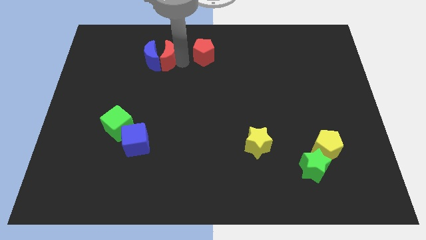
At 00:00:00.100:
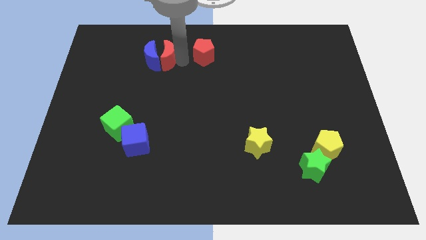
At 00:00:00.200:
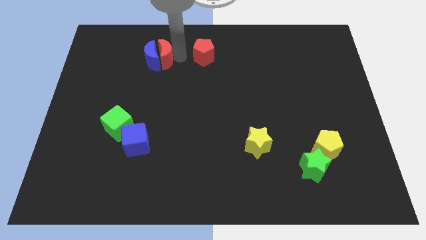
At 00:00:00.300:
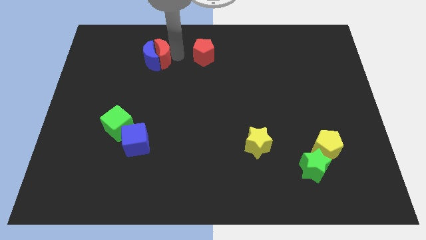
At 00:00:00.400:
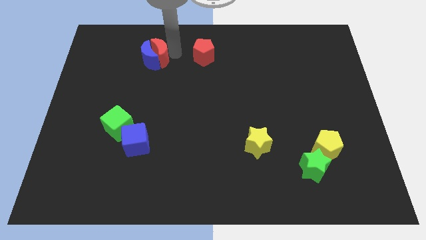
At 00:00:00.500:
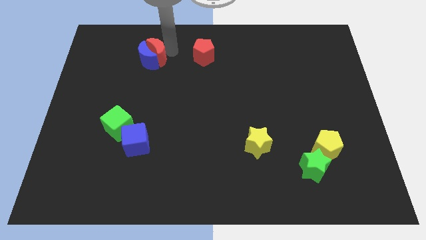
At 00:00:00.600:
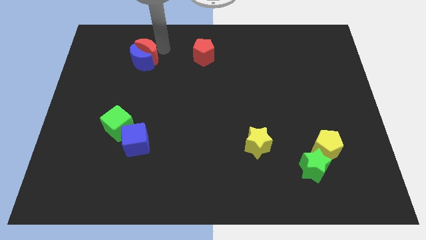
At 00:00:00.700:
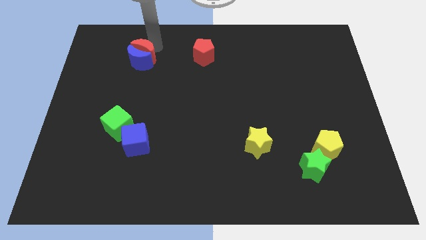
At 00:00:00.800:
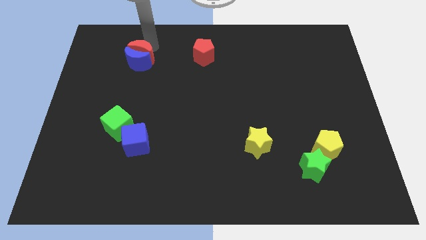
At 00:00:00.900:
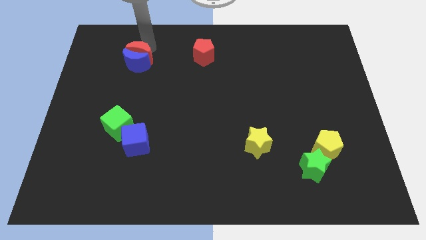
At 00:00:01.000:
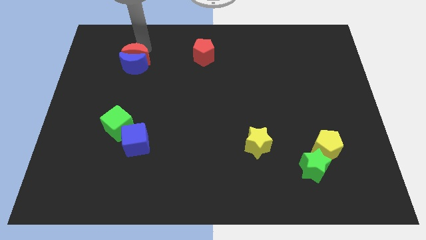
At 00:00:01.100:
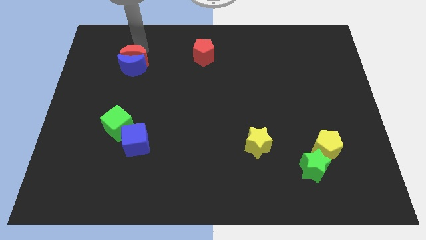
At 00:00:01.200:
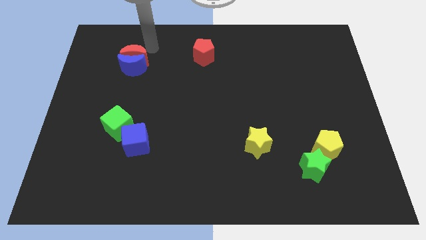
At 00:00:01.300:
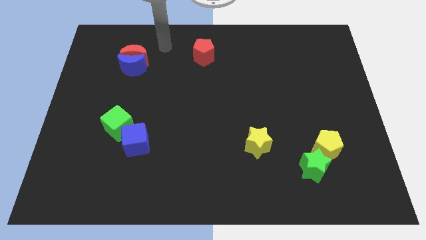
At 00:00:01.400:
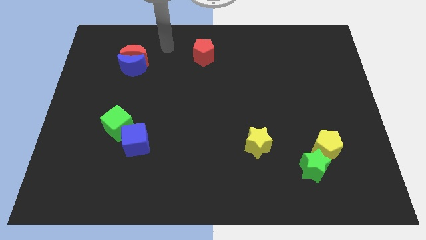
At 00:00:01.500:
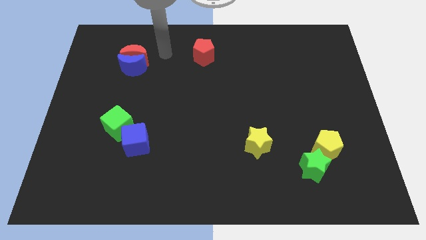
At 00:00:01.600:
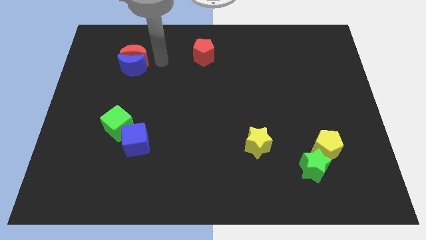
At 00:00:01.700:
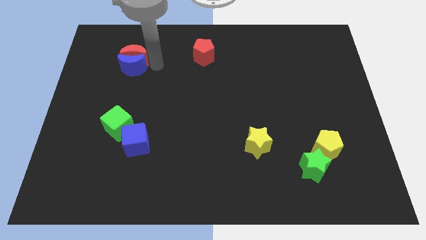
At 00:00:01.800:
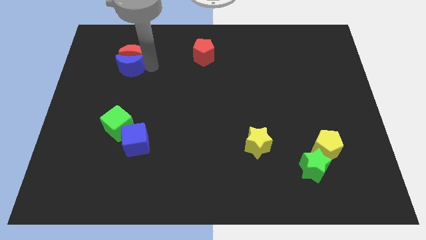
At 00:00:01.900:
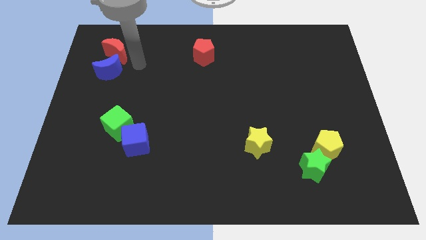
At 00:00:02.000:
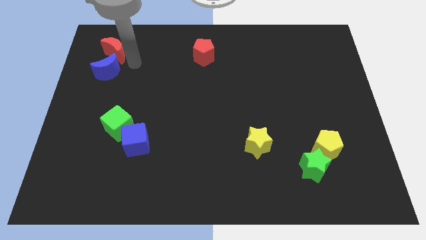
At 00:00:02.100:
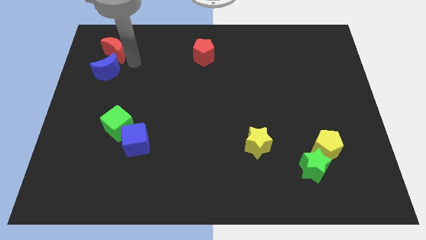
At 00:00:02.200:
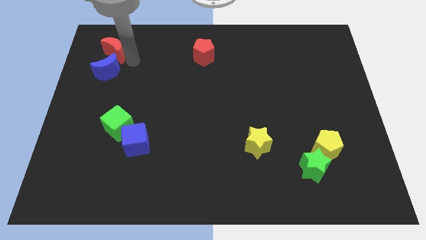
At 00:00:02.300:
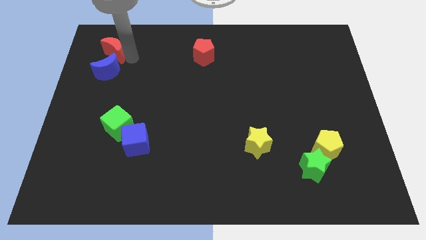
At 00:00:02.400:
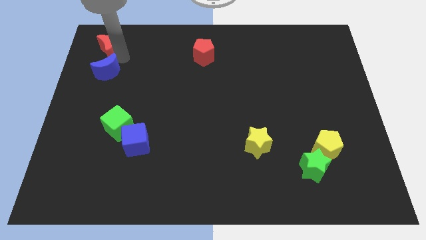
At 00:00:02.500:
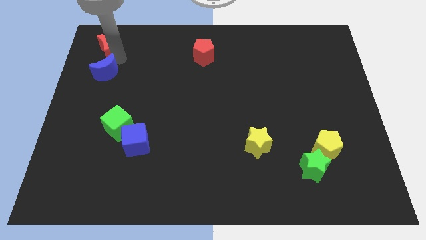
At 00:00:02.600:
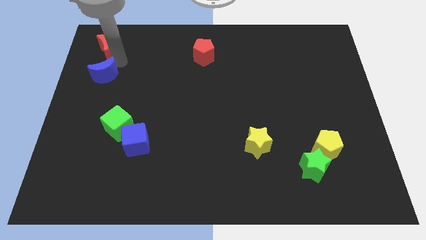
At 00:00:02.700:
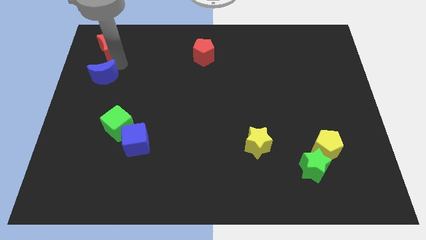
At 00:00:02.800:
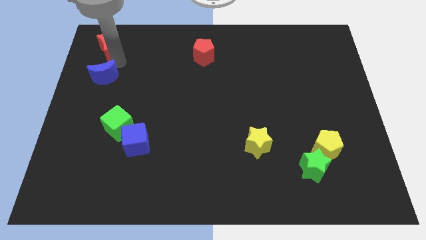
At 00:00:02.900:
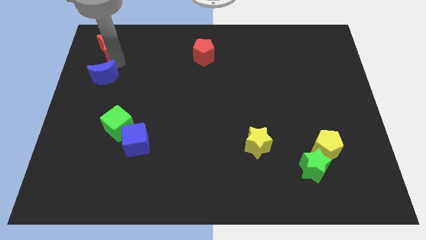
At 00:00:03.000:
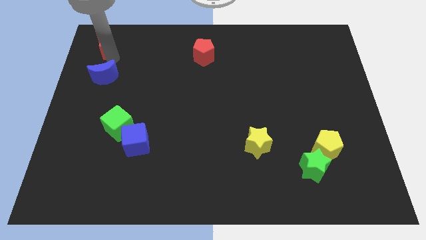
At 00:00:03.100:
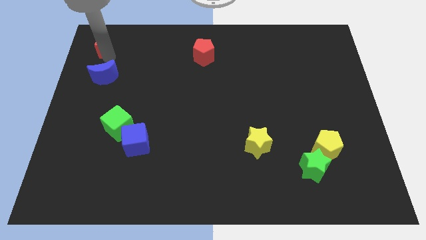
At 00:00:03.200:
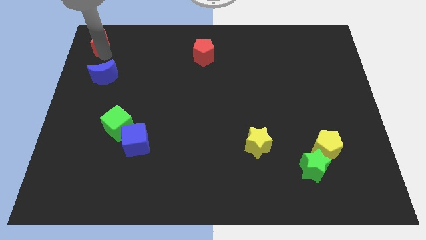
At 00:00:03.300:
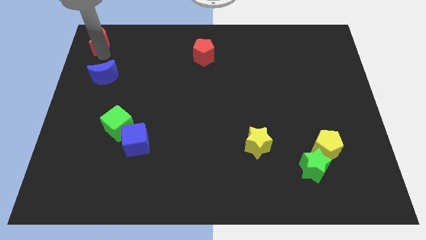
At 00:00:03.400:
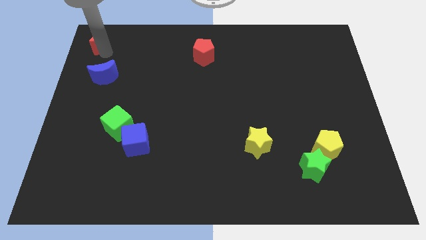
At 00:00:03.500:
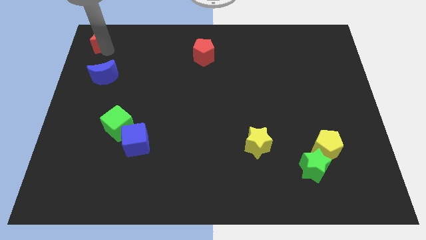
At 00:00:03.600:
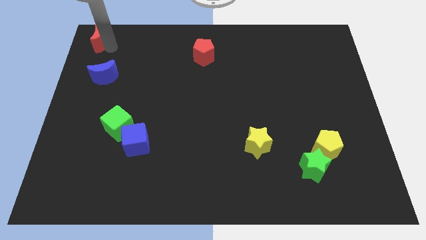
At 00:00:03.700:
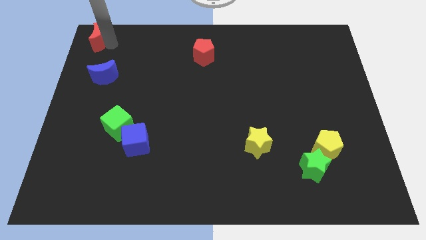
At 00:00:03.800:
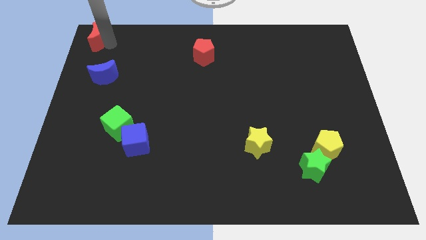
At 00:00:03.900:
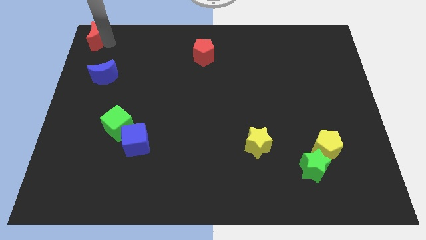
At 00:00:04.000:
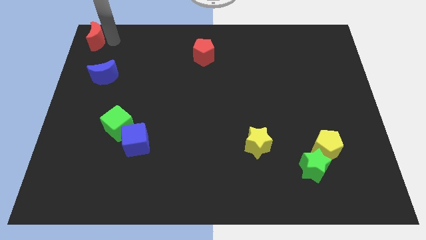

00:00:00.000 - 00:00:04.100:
separate the red crescent from the blue crescent

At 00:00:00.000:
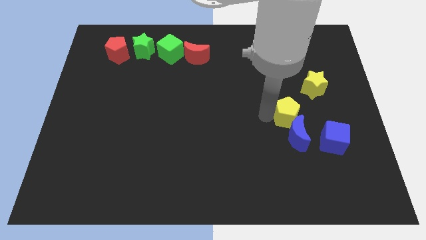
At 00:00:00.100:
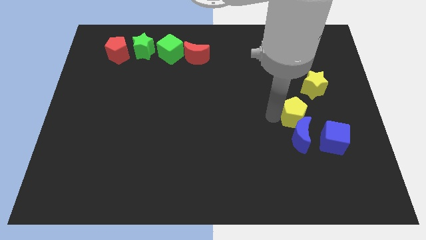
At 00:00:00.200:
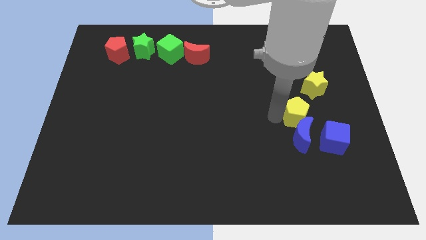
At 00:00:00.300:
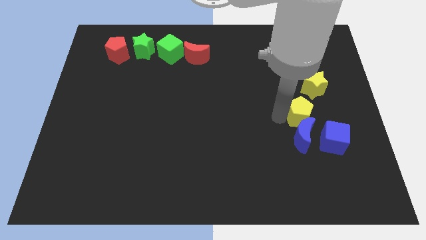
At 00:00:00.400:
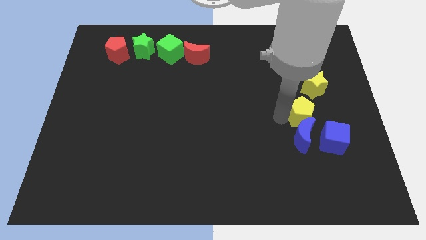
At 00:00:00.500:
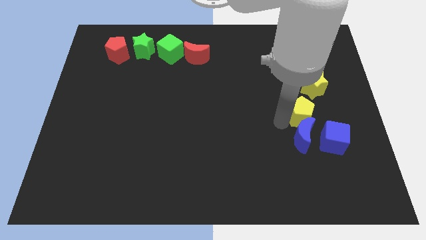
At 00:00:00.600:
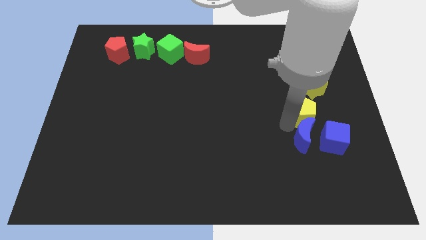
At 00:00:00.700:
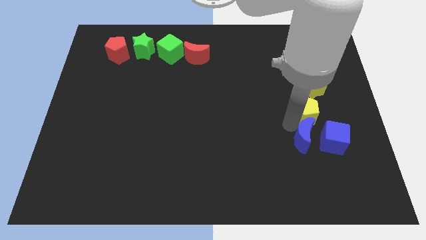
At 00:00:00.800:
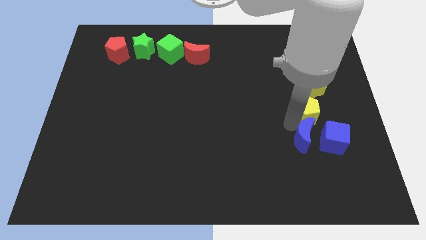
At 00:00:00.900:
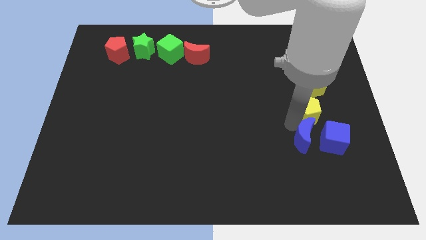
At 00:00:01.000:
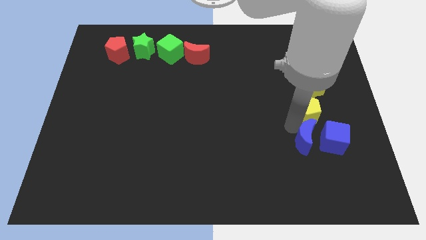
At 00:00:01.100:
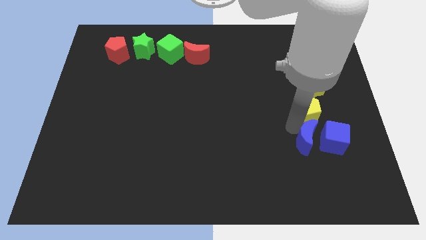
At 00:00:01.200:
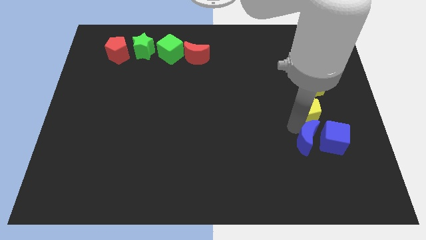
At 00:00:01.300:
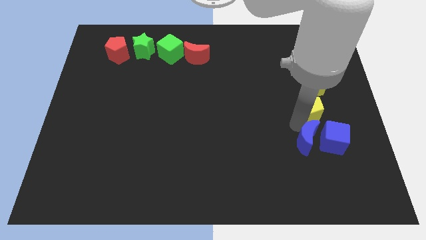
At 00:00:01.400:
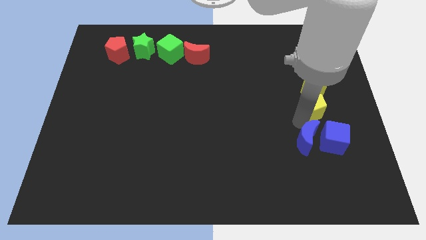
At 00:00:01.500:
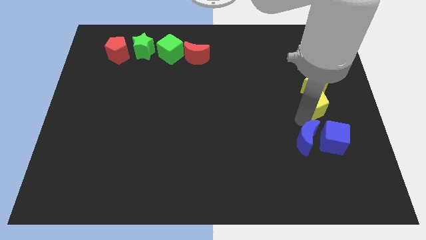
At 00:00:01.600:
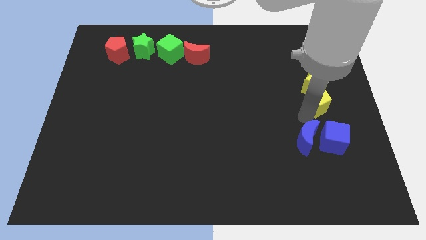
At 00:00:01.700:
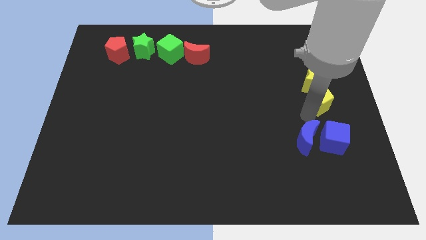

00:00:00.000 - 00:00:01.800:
place the yellow pentagon in between the blue cube and yellow star

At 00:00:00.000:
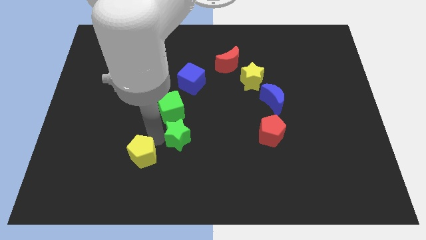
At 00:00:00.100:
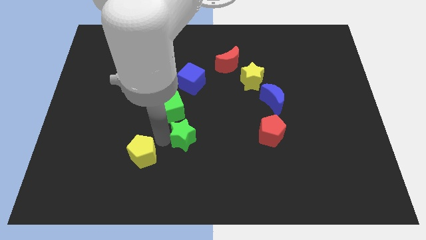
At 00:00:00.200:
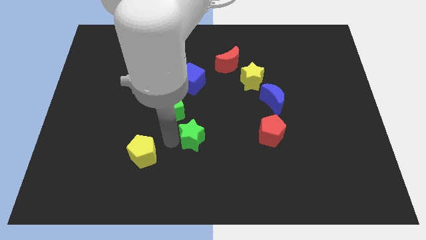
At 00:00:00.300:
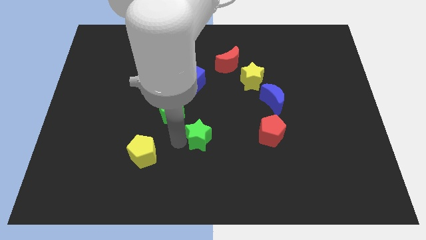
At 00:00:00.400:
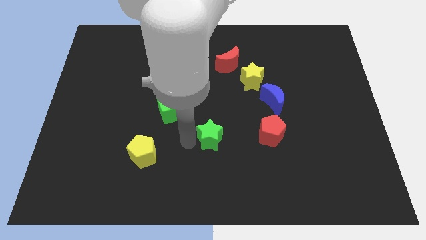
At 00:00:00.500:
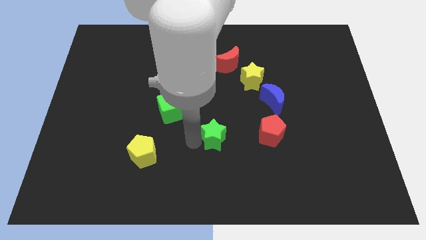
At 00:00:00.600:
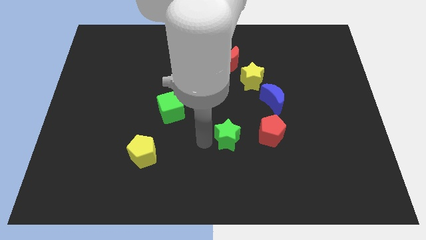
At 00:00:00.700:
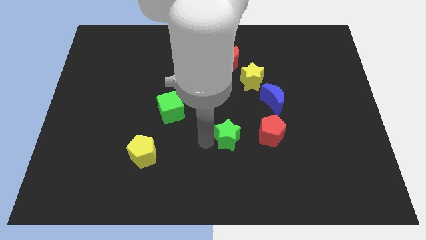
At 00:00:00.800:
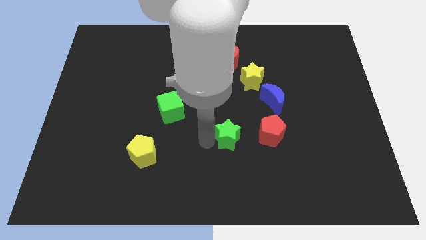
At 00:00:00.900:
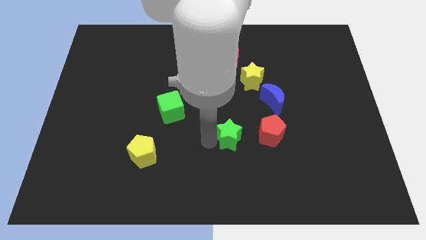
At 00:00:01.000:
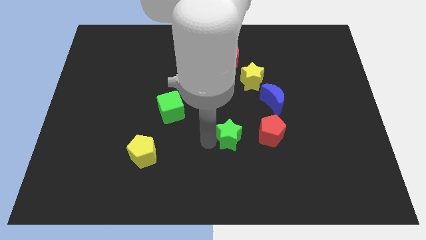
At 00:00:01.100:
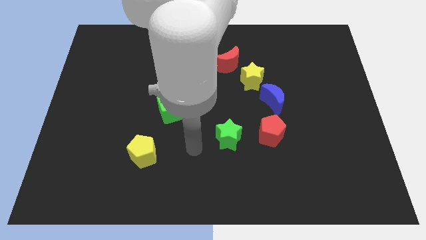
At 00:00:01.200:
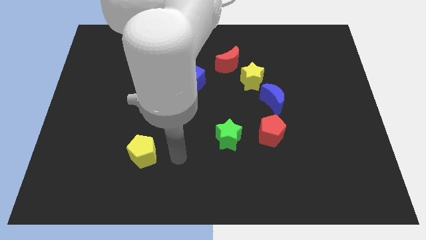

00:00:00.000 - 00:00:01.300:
move the green star towards red pentagon

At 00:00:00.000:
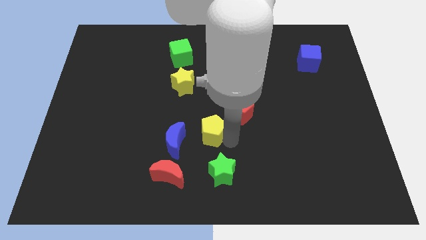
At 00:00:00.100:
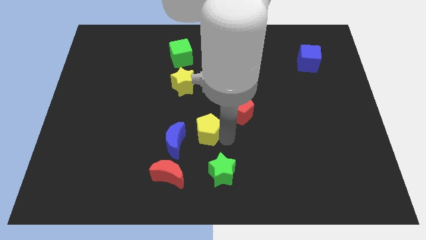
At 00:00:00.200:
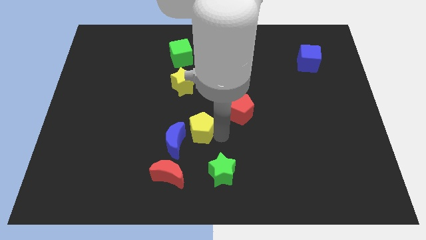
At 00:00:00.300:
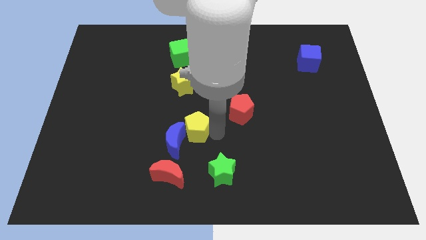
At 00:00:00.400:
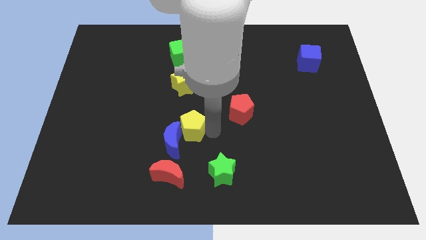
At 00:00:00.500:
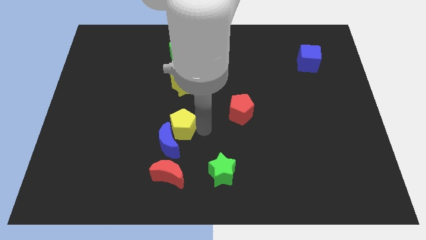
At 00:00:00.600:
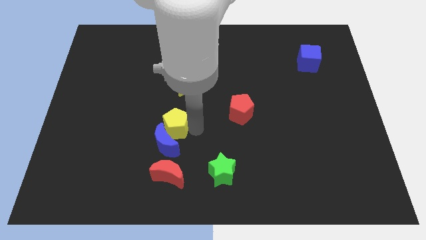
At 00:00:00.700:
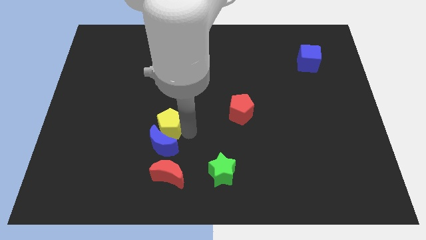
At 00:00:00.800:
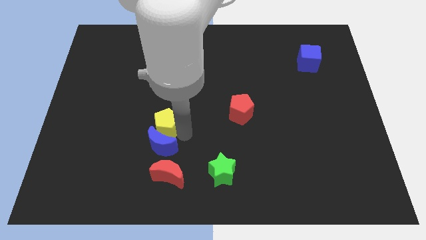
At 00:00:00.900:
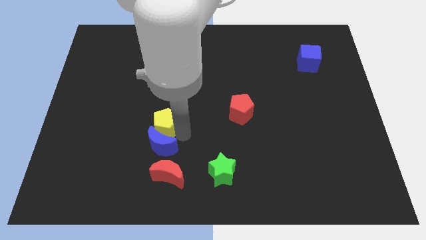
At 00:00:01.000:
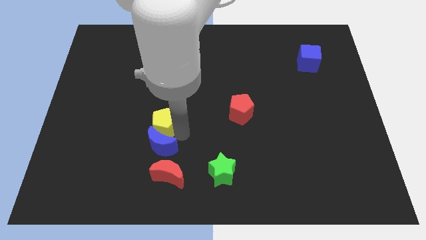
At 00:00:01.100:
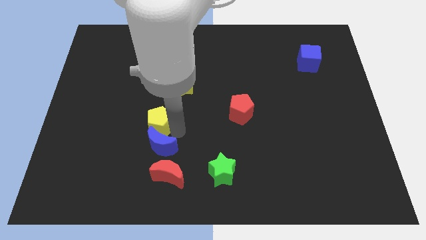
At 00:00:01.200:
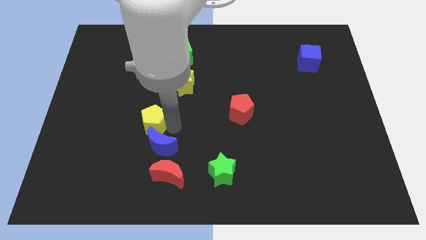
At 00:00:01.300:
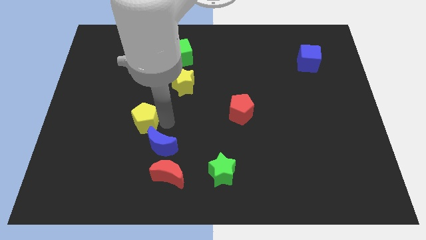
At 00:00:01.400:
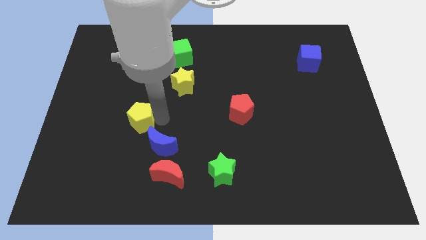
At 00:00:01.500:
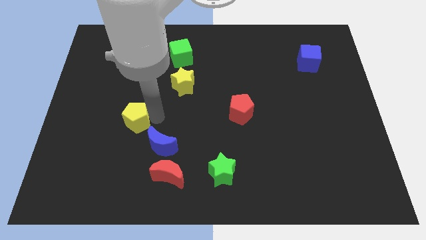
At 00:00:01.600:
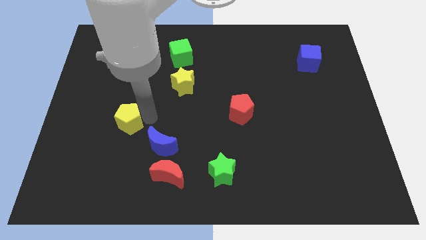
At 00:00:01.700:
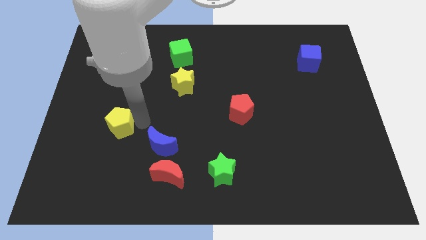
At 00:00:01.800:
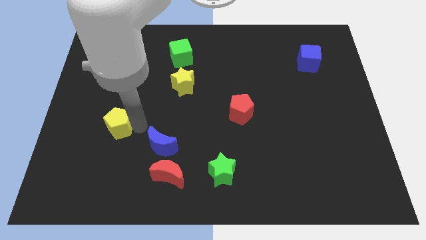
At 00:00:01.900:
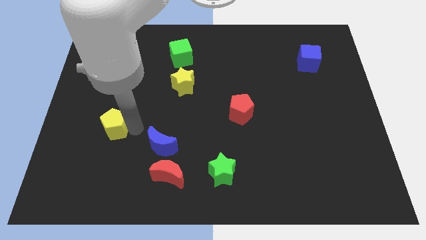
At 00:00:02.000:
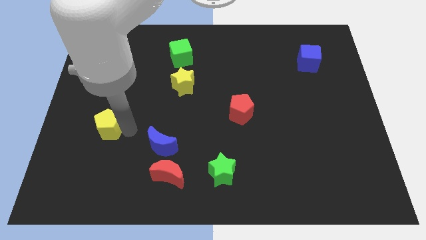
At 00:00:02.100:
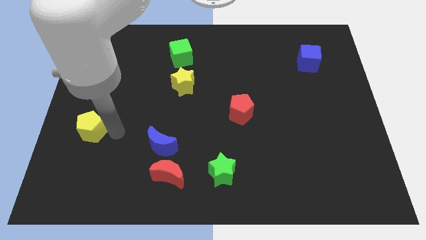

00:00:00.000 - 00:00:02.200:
move the yellow pentagon towards left
